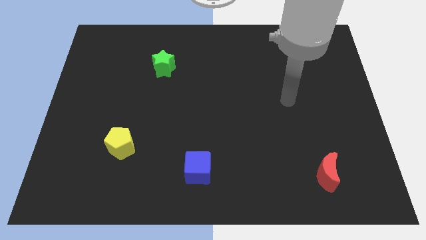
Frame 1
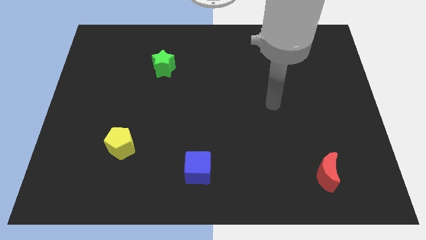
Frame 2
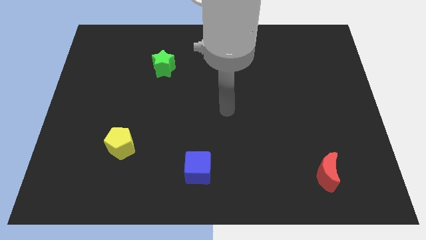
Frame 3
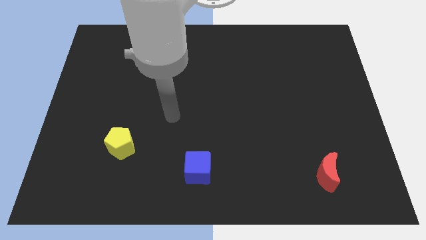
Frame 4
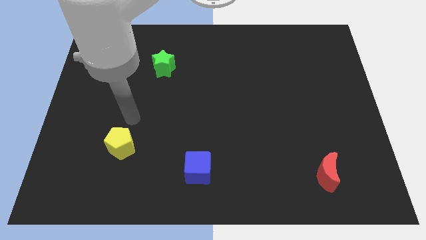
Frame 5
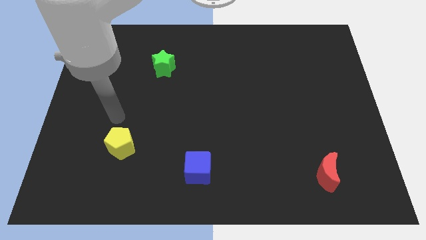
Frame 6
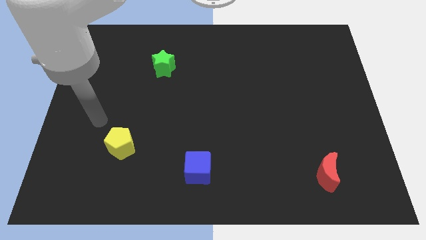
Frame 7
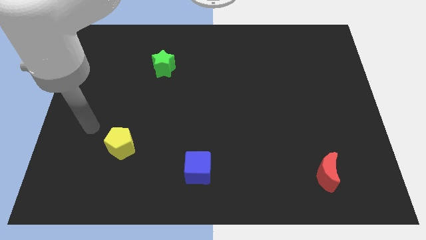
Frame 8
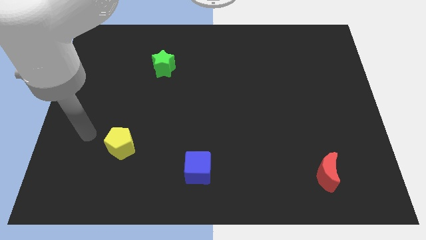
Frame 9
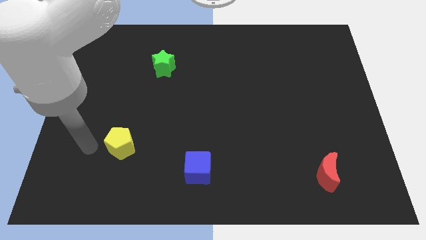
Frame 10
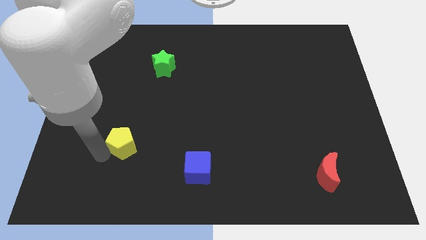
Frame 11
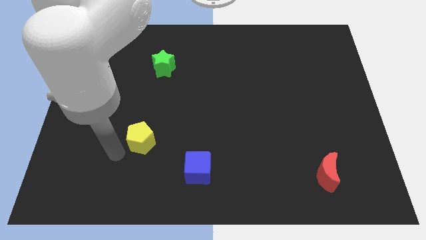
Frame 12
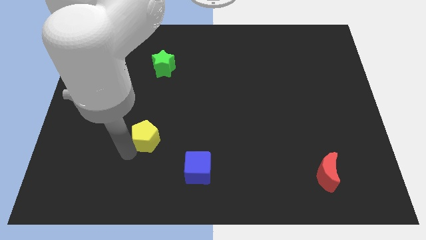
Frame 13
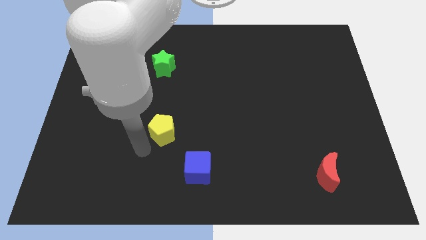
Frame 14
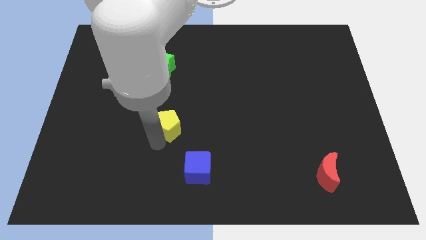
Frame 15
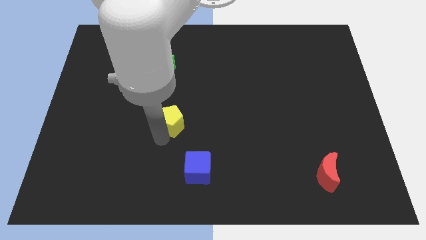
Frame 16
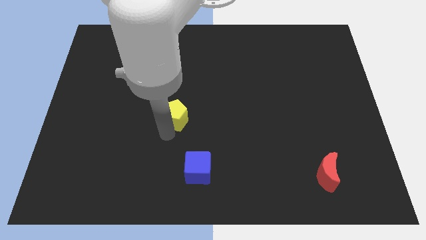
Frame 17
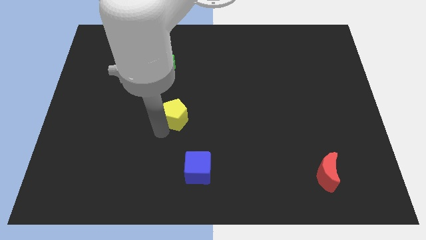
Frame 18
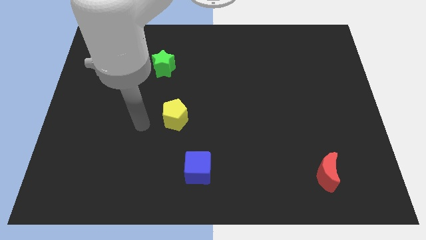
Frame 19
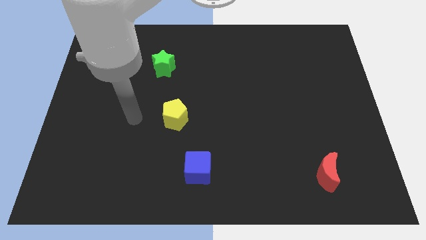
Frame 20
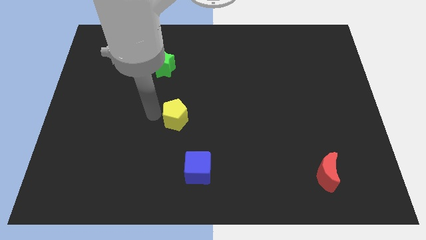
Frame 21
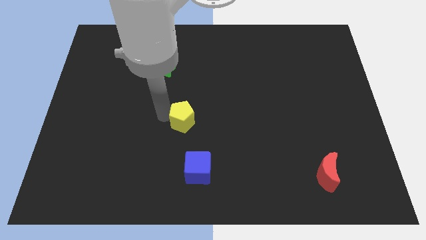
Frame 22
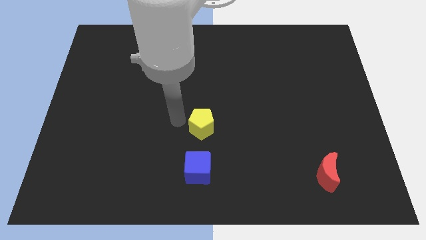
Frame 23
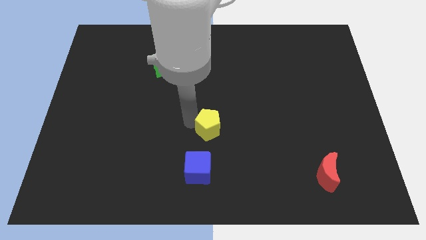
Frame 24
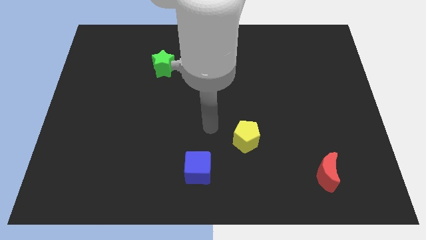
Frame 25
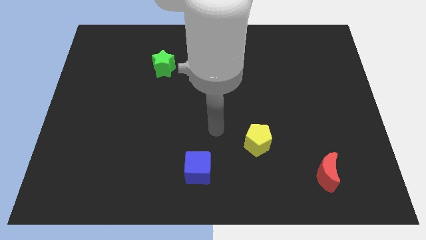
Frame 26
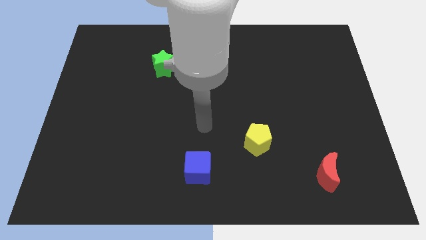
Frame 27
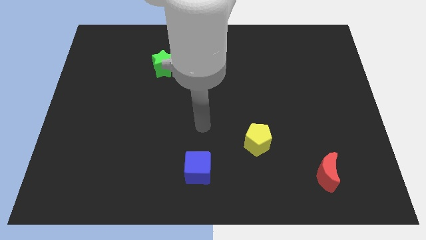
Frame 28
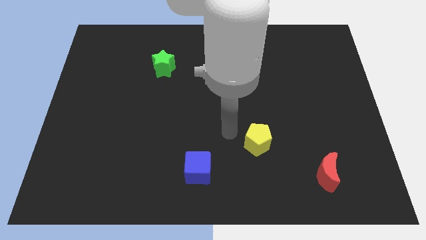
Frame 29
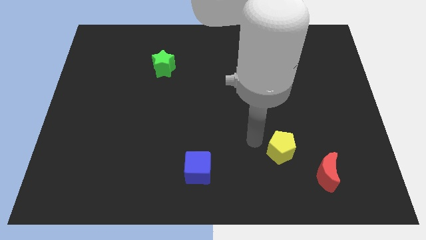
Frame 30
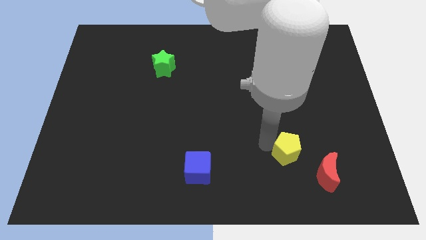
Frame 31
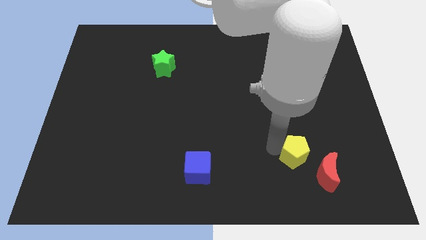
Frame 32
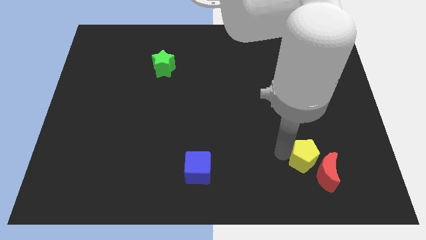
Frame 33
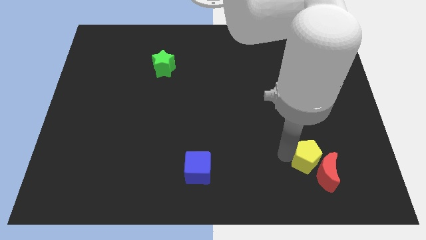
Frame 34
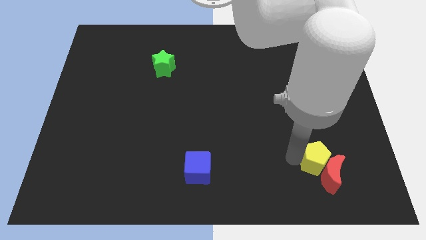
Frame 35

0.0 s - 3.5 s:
push the yellow block next to the red moon

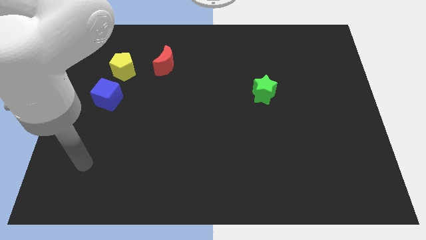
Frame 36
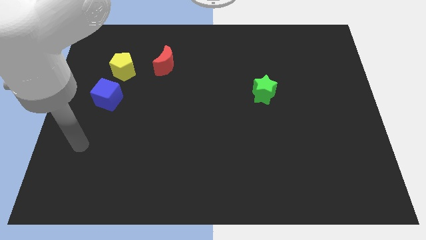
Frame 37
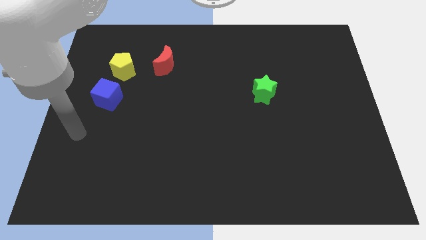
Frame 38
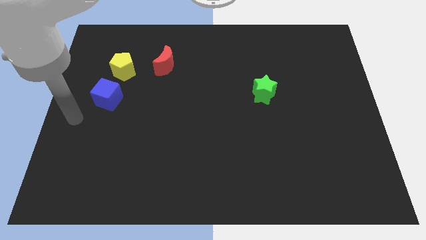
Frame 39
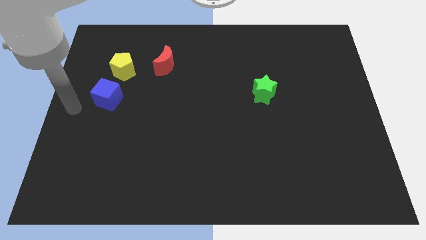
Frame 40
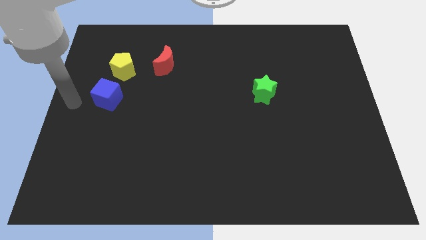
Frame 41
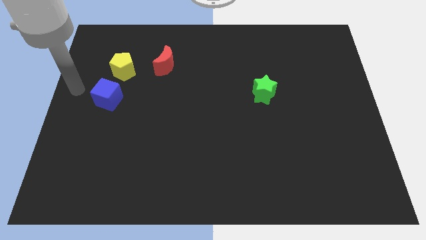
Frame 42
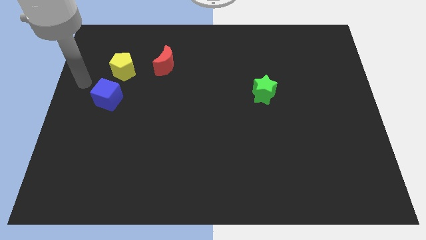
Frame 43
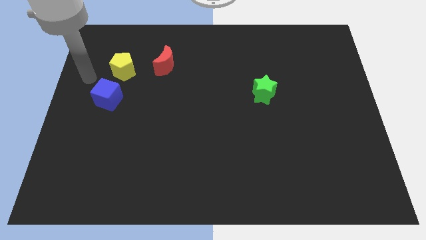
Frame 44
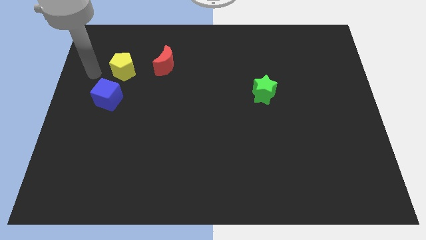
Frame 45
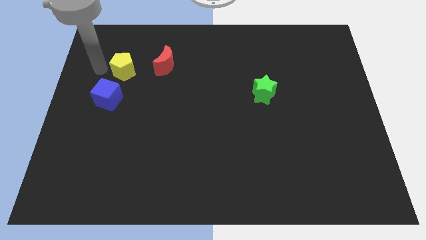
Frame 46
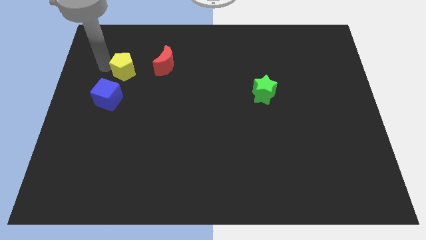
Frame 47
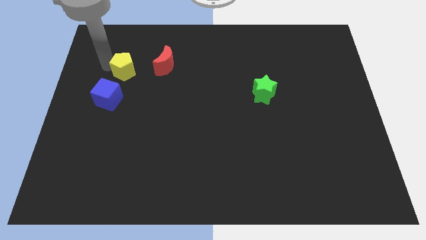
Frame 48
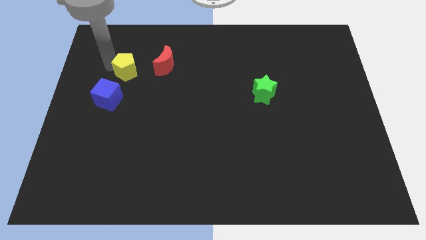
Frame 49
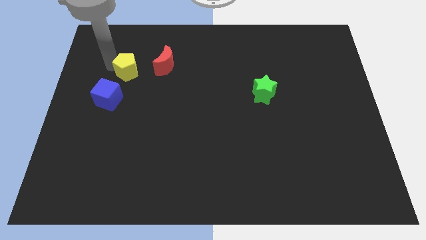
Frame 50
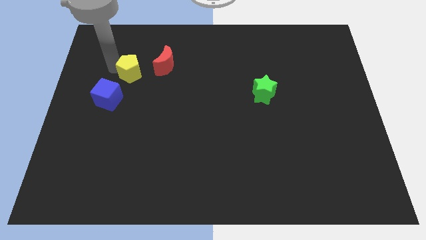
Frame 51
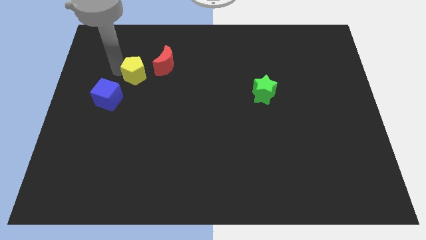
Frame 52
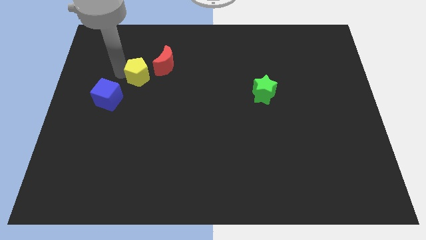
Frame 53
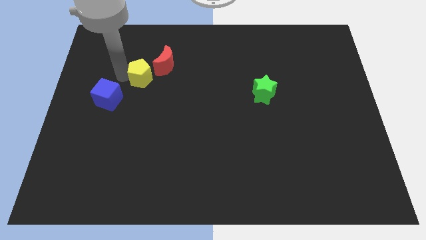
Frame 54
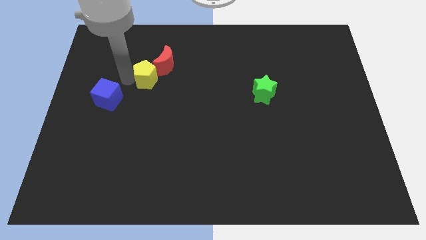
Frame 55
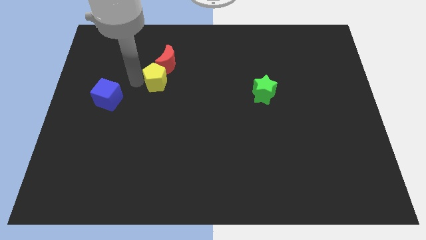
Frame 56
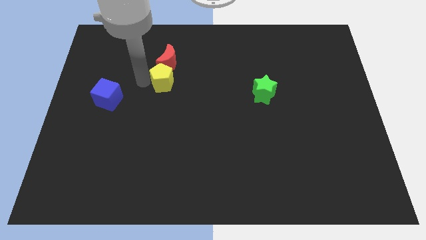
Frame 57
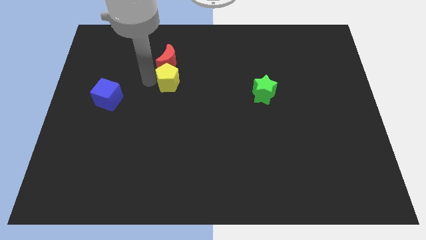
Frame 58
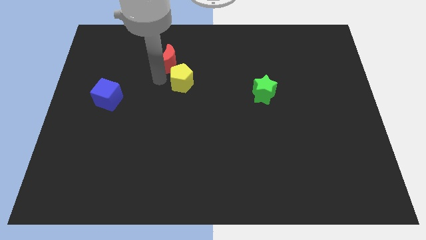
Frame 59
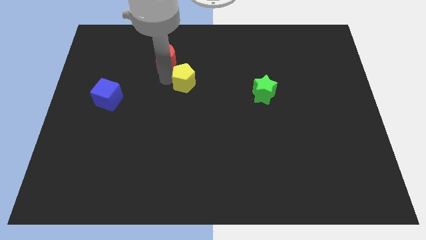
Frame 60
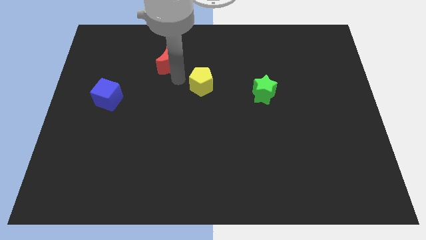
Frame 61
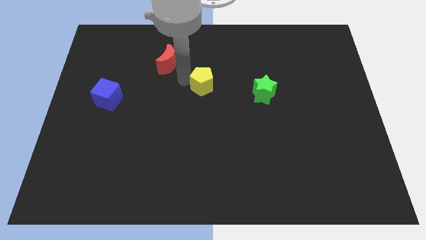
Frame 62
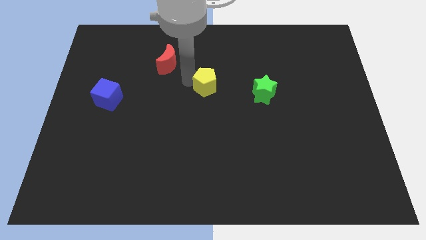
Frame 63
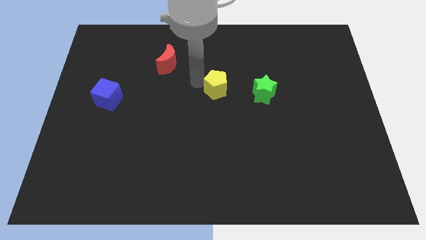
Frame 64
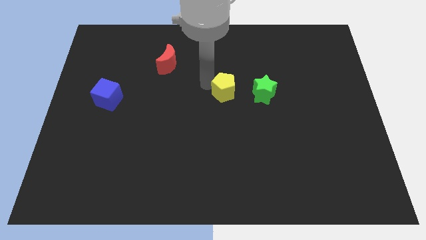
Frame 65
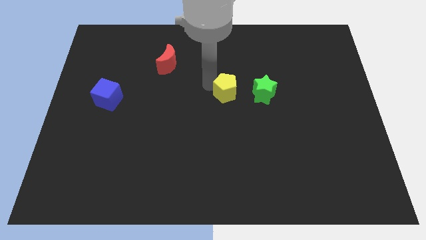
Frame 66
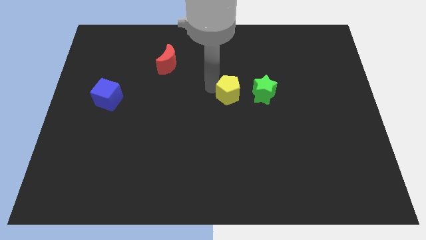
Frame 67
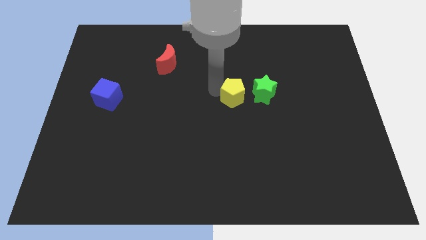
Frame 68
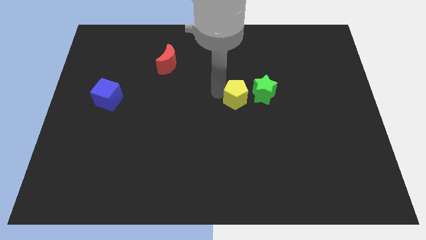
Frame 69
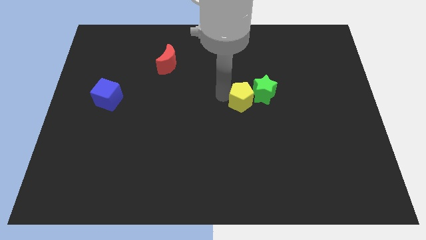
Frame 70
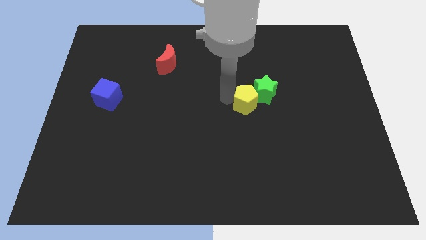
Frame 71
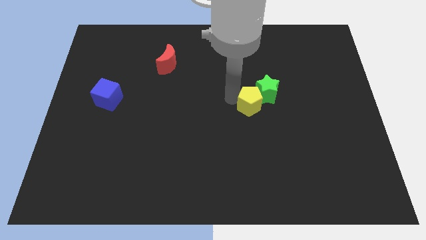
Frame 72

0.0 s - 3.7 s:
move the yellow block next to the green block

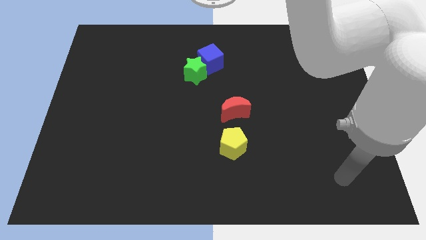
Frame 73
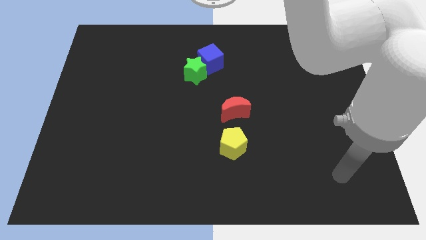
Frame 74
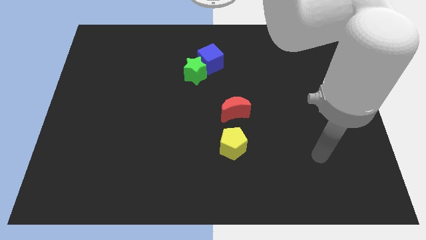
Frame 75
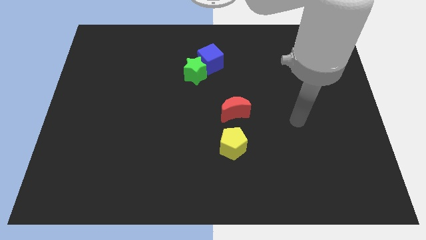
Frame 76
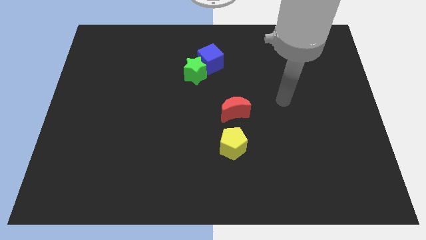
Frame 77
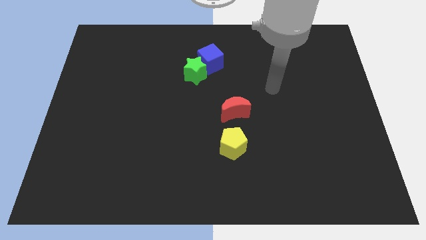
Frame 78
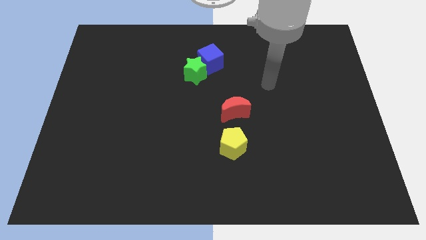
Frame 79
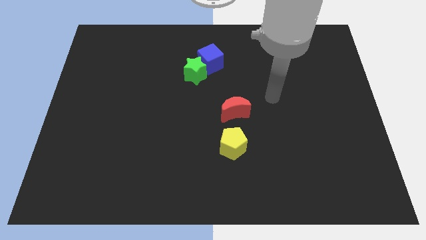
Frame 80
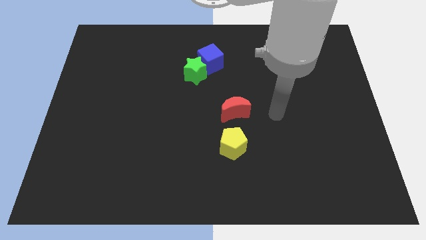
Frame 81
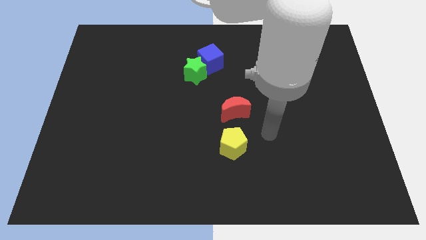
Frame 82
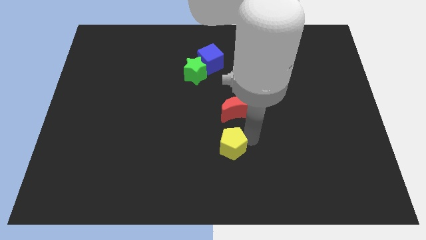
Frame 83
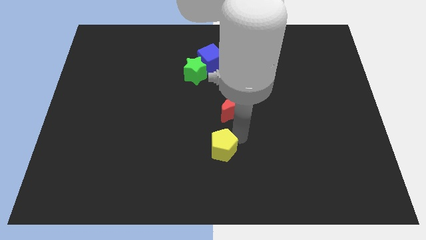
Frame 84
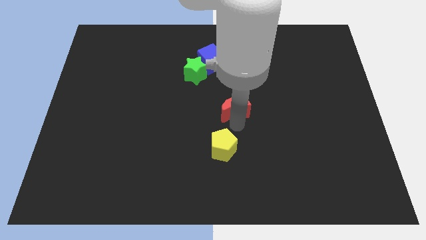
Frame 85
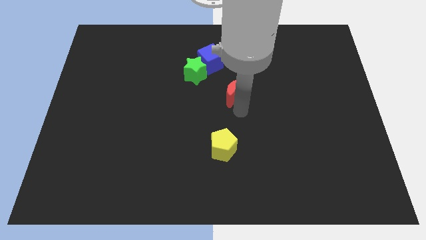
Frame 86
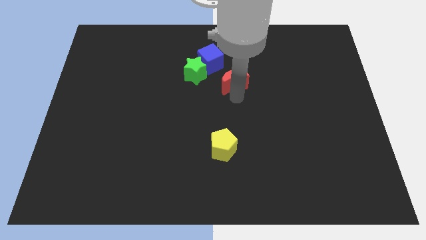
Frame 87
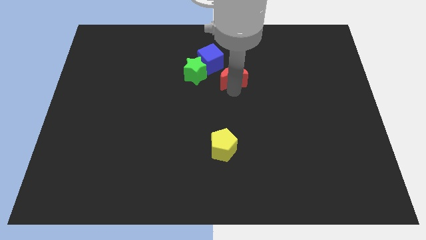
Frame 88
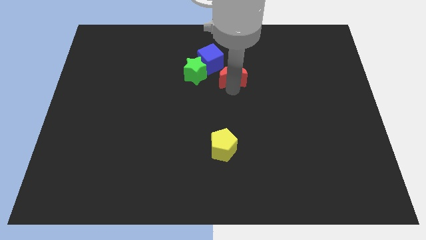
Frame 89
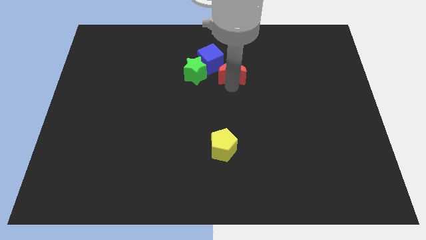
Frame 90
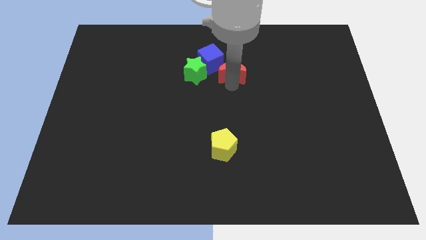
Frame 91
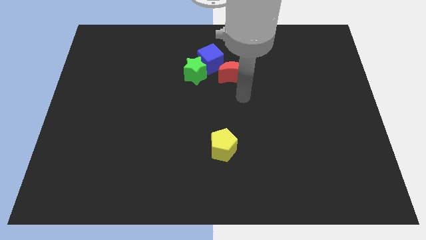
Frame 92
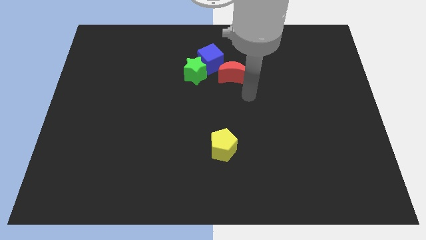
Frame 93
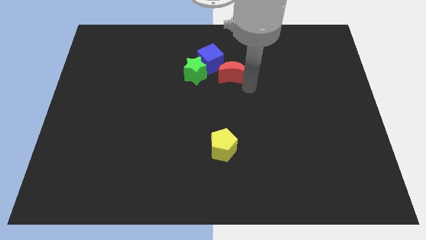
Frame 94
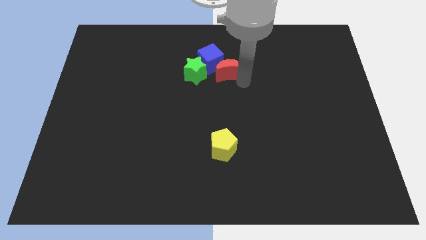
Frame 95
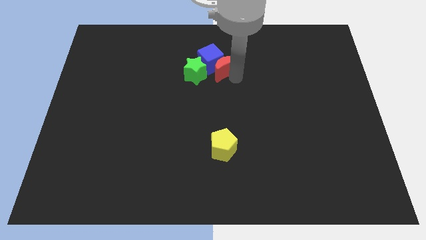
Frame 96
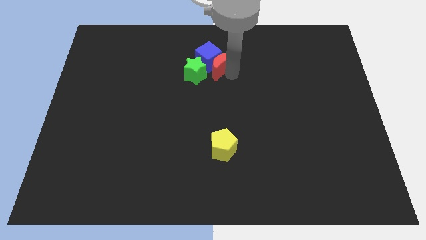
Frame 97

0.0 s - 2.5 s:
put the moon next to the cube
